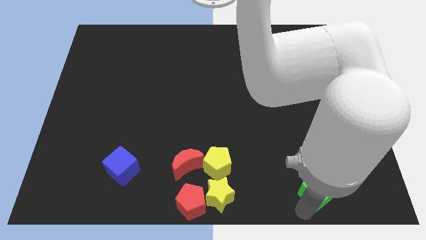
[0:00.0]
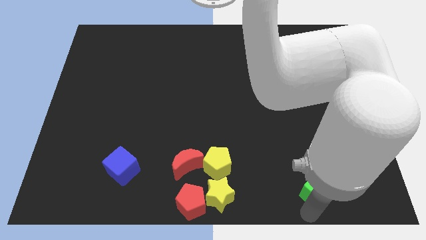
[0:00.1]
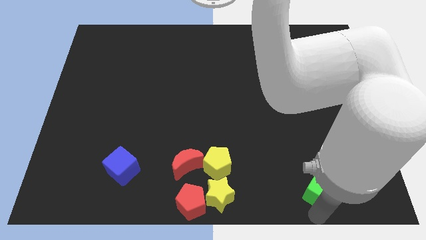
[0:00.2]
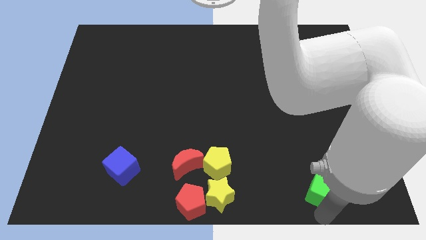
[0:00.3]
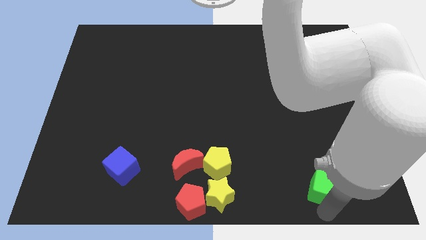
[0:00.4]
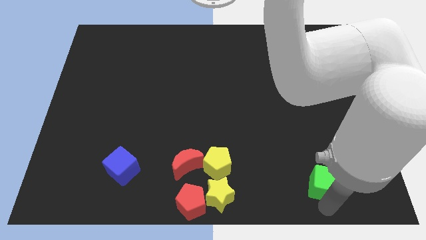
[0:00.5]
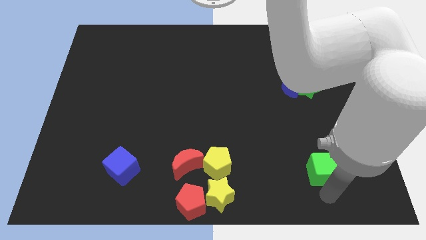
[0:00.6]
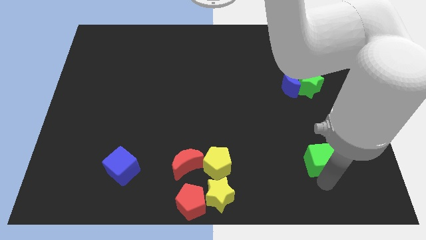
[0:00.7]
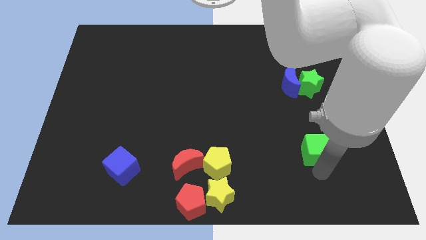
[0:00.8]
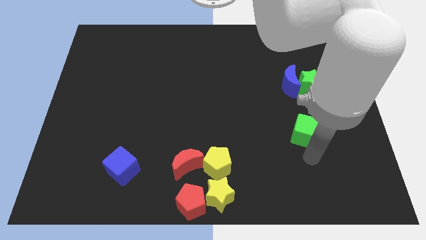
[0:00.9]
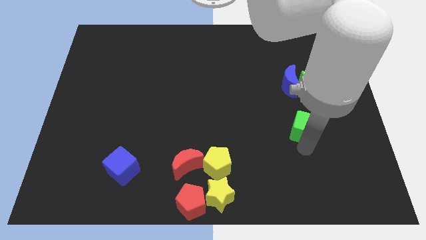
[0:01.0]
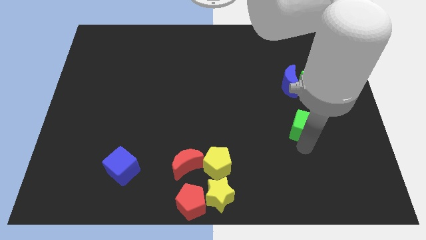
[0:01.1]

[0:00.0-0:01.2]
move the green cube below the blue moon

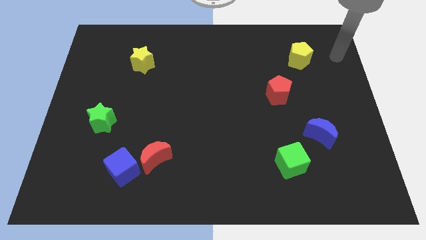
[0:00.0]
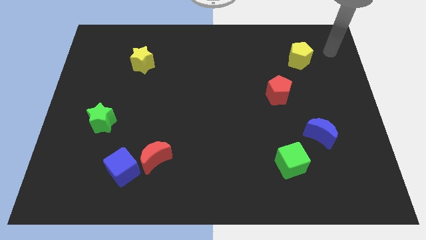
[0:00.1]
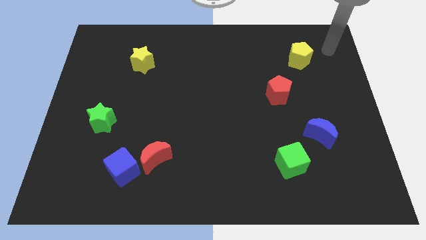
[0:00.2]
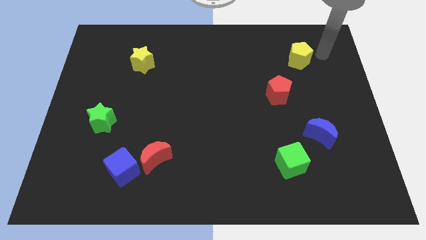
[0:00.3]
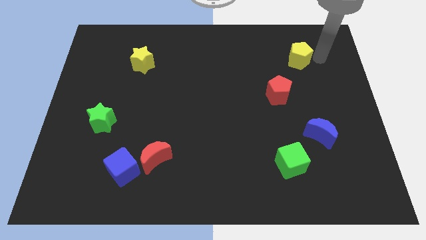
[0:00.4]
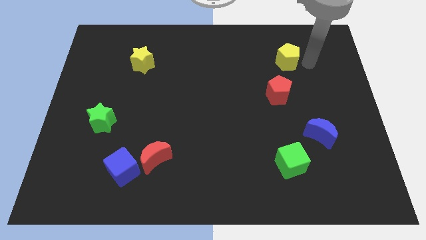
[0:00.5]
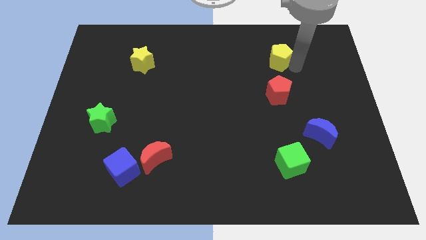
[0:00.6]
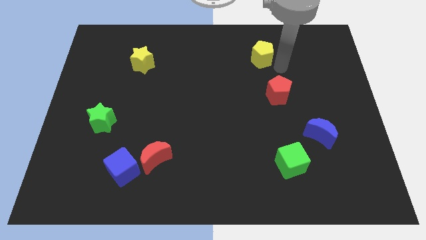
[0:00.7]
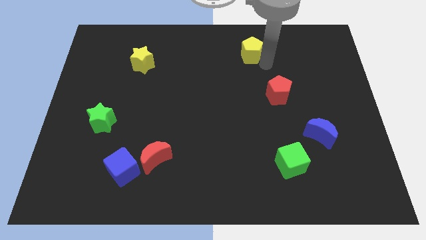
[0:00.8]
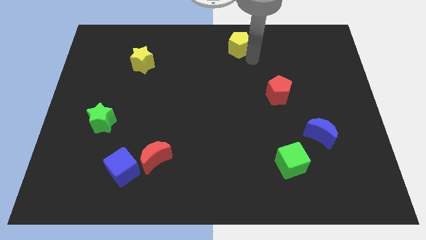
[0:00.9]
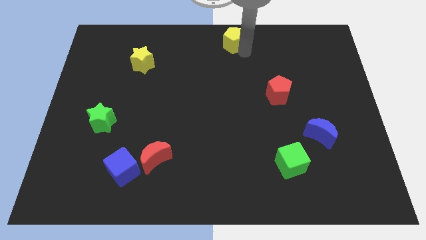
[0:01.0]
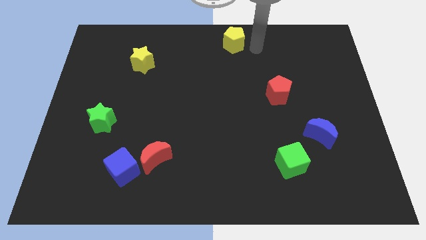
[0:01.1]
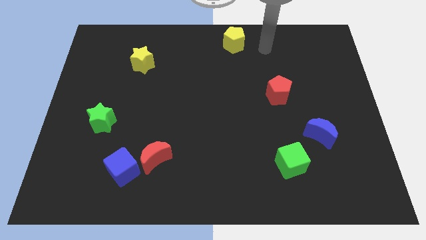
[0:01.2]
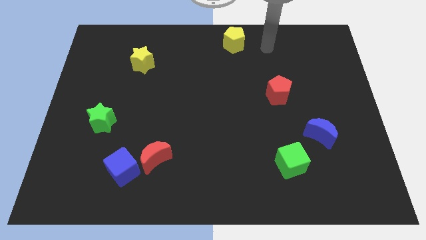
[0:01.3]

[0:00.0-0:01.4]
move the yellow pentagon to the top center of the board

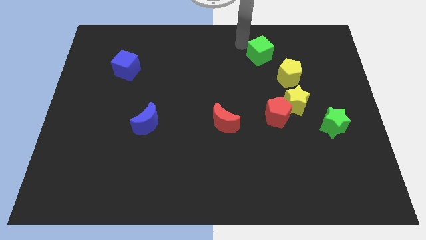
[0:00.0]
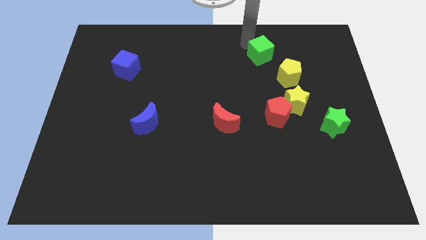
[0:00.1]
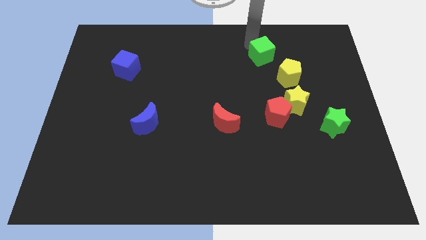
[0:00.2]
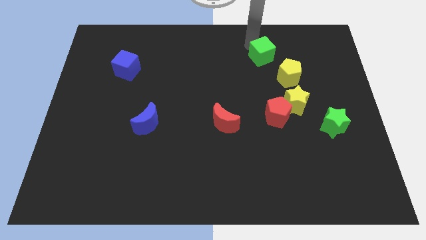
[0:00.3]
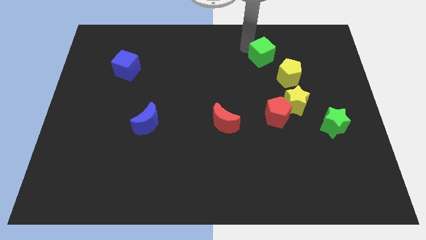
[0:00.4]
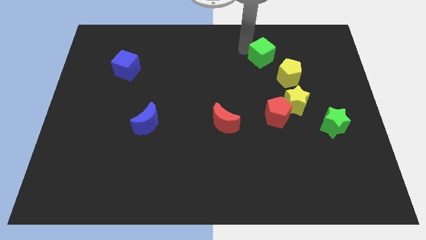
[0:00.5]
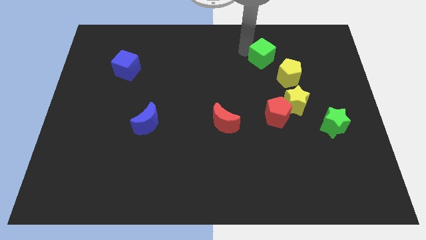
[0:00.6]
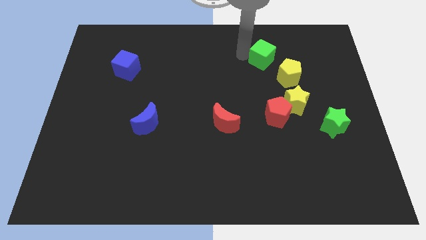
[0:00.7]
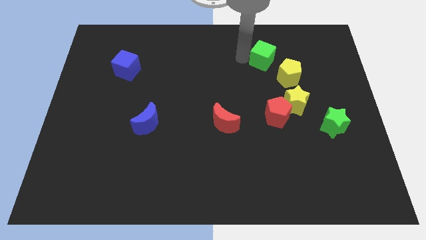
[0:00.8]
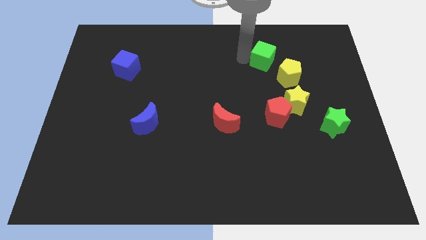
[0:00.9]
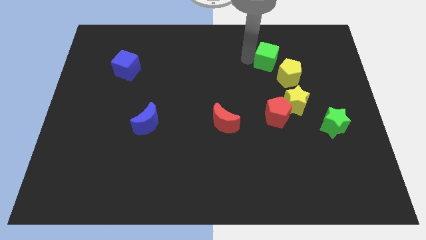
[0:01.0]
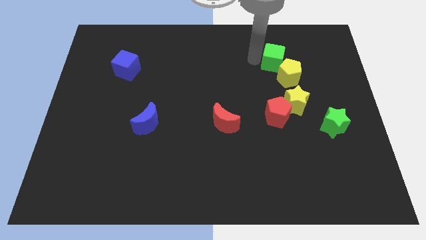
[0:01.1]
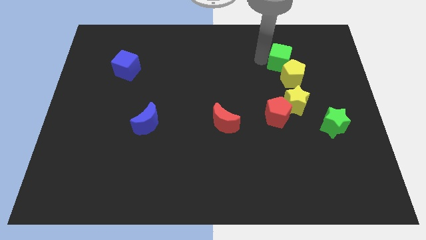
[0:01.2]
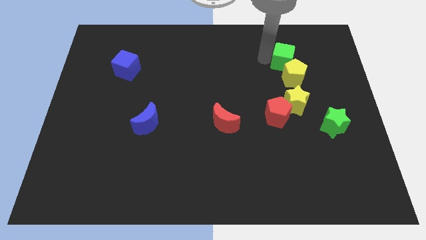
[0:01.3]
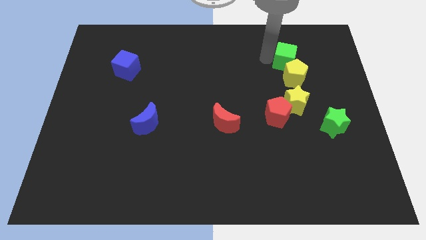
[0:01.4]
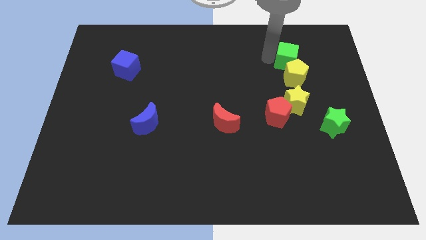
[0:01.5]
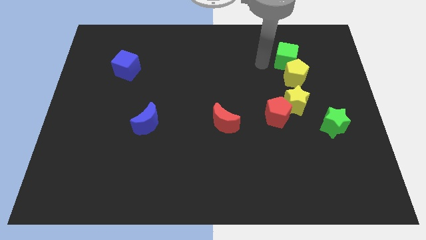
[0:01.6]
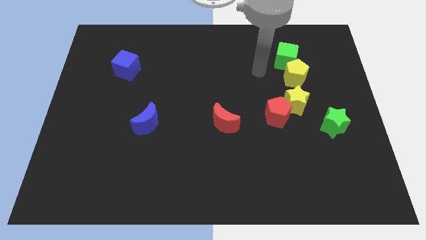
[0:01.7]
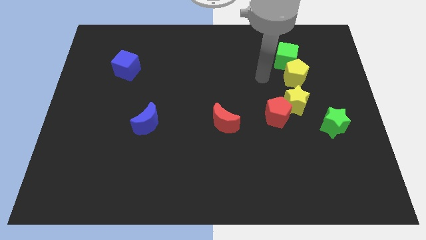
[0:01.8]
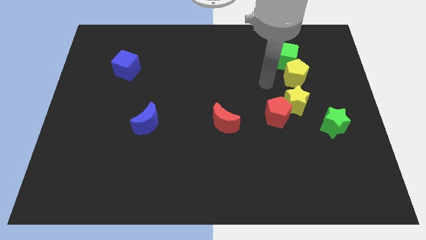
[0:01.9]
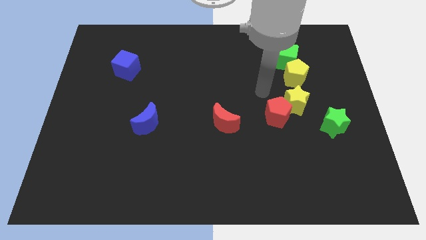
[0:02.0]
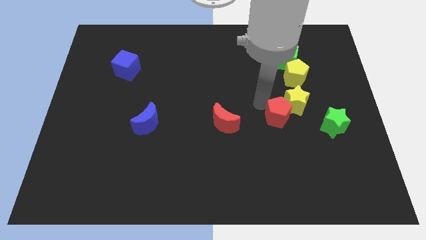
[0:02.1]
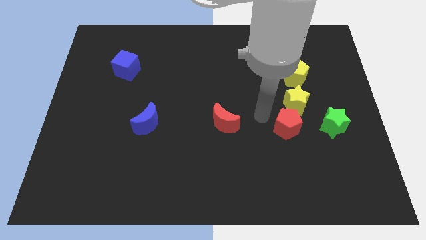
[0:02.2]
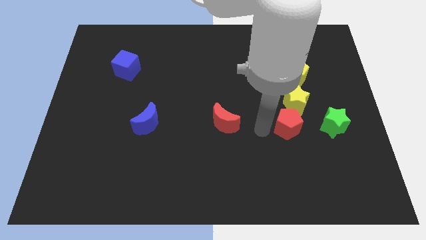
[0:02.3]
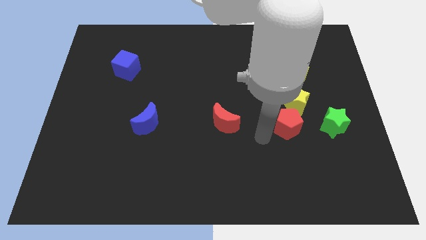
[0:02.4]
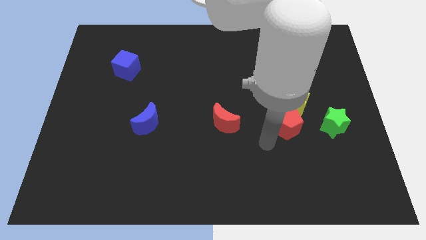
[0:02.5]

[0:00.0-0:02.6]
move the red pentagon down to the yellow star

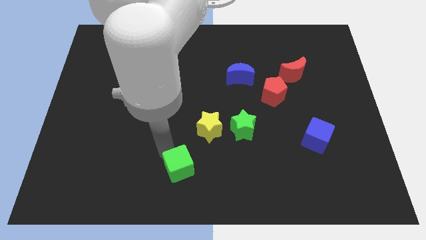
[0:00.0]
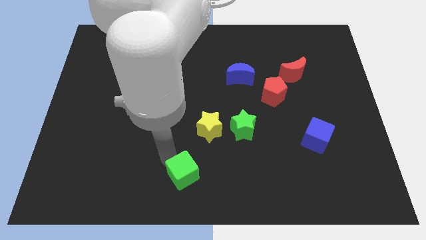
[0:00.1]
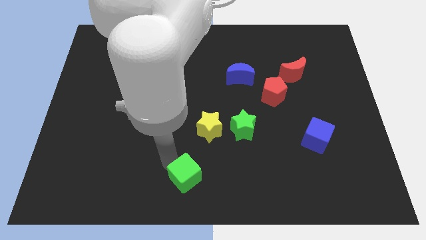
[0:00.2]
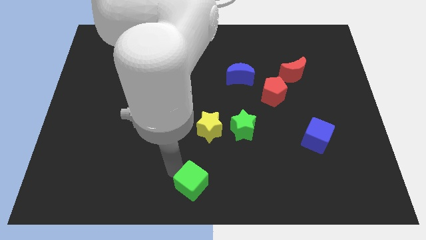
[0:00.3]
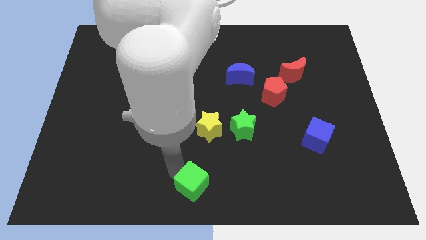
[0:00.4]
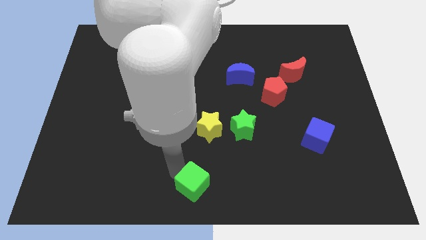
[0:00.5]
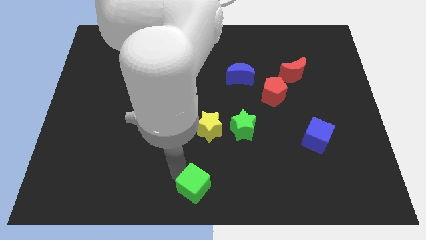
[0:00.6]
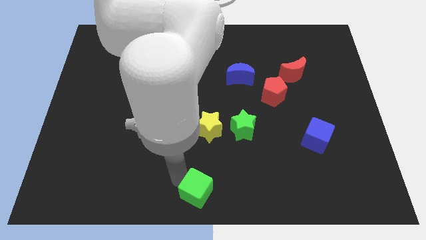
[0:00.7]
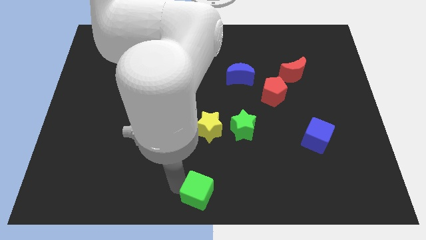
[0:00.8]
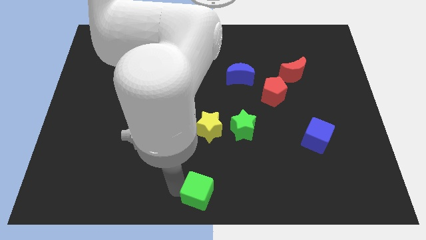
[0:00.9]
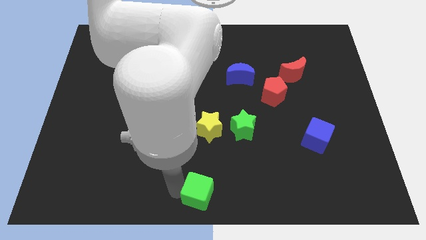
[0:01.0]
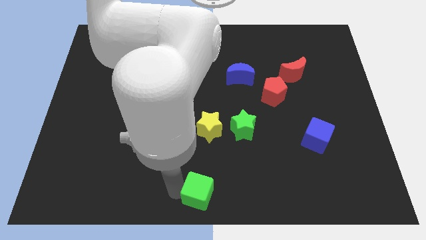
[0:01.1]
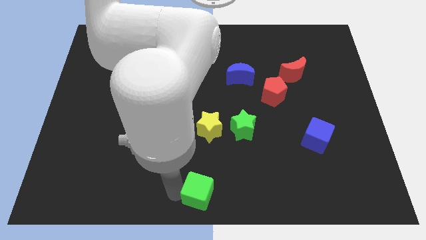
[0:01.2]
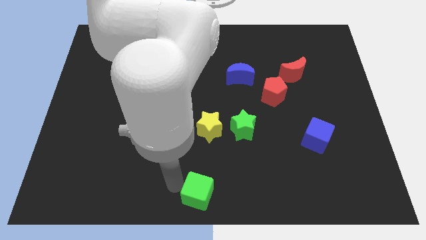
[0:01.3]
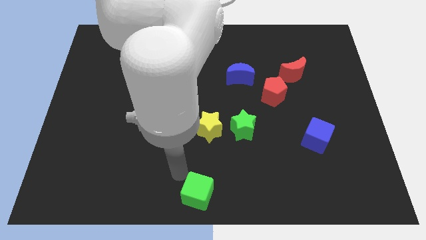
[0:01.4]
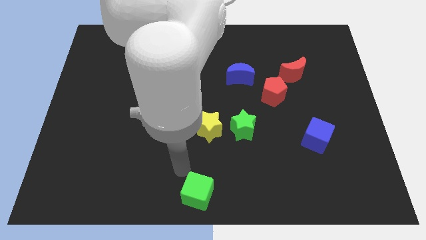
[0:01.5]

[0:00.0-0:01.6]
push the green cube to the bottom center

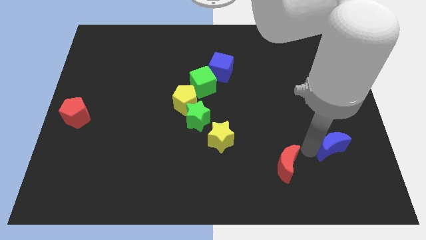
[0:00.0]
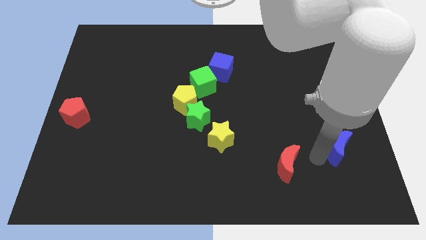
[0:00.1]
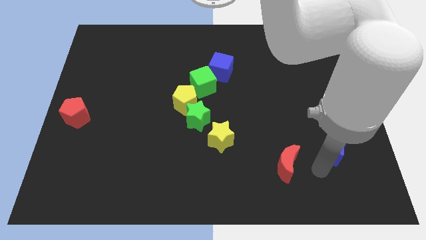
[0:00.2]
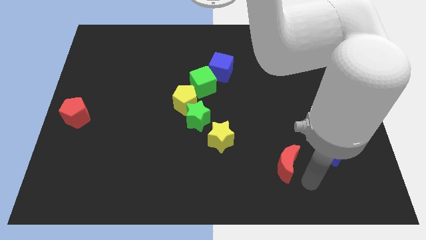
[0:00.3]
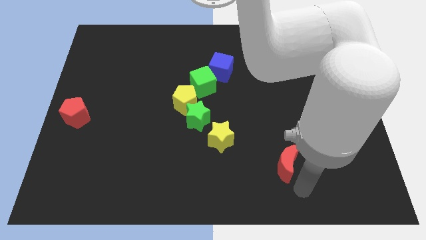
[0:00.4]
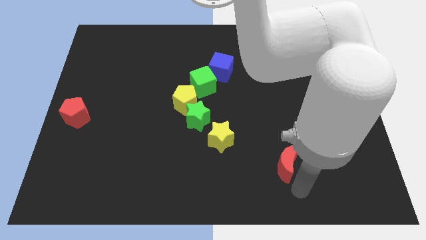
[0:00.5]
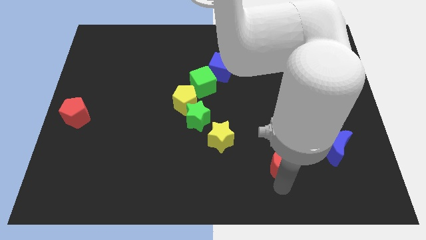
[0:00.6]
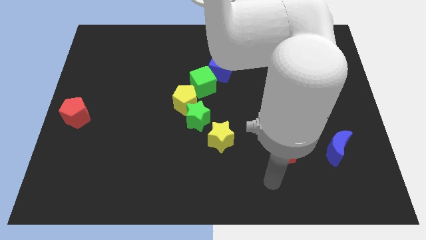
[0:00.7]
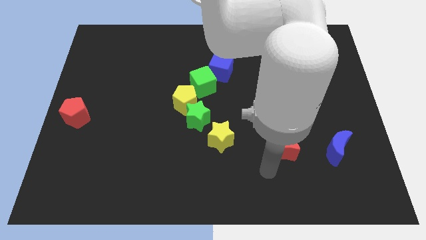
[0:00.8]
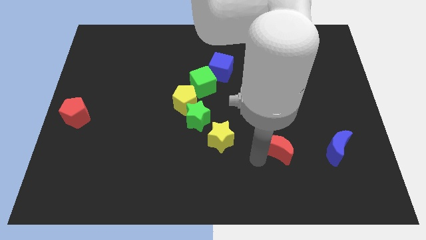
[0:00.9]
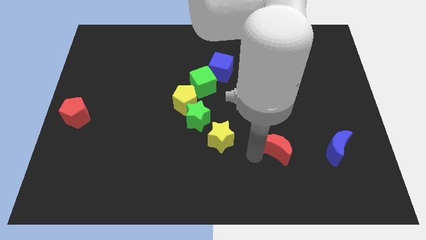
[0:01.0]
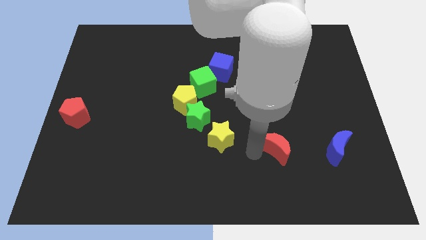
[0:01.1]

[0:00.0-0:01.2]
touch red pentagon which is left to blue moon

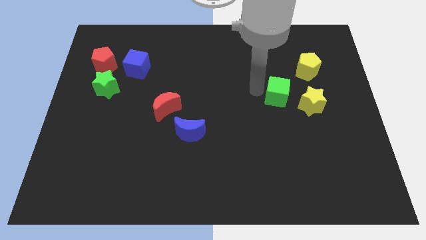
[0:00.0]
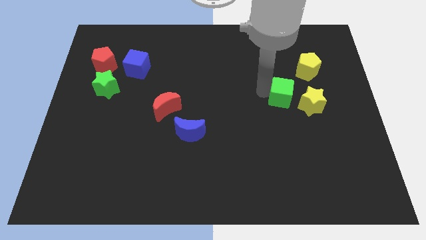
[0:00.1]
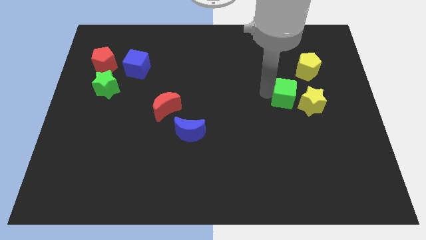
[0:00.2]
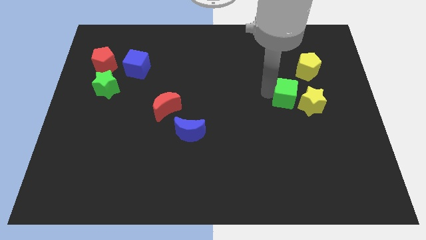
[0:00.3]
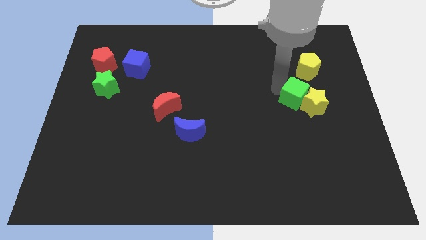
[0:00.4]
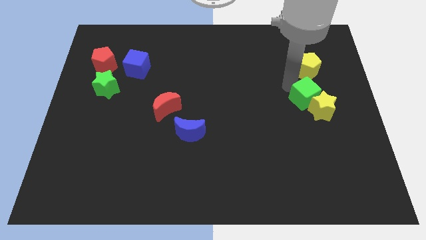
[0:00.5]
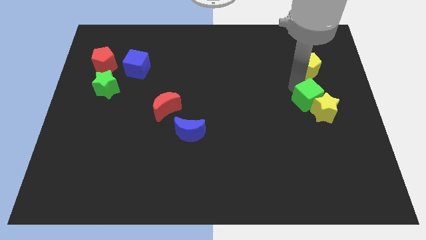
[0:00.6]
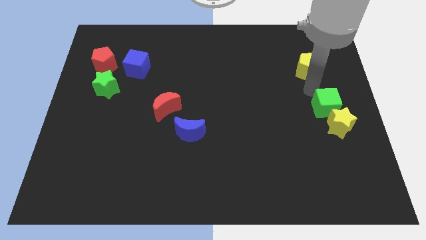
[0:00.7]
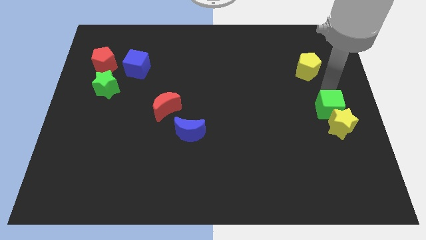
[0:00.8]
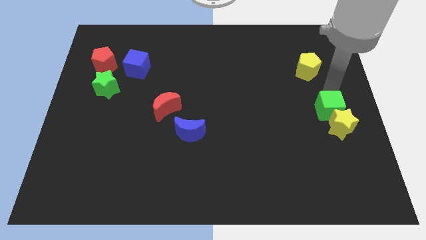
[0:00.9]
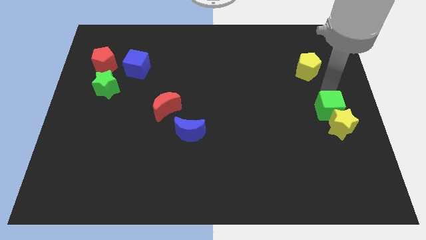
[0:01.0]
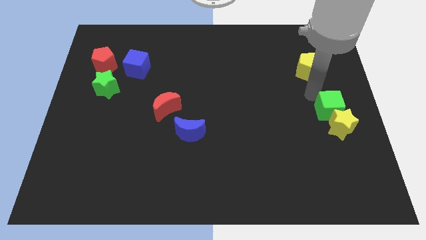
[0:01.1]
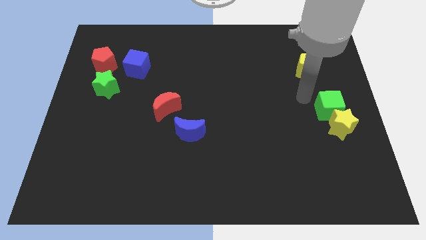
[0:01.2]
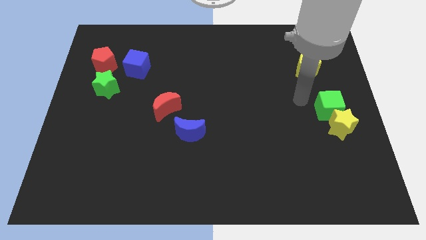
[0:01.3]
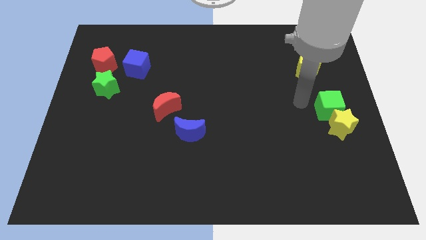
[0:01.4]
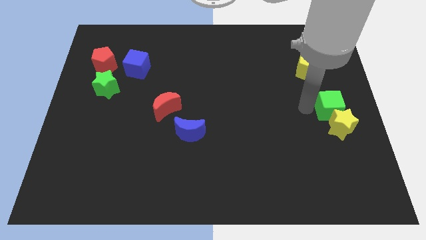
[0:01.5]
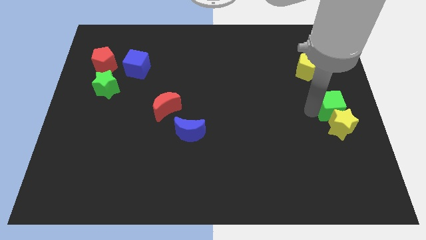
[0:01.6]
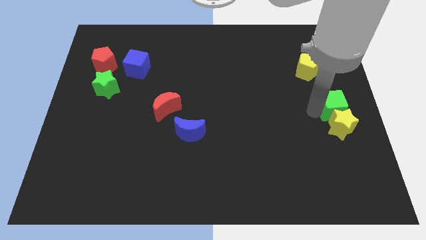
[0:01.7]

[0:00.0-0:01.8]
place the green cube above the yellow star
